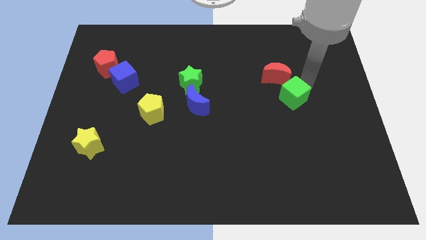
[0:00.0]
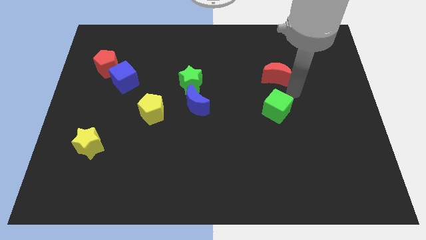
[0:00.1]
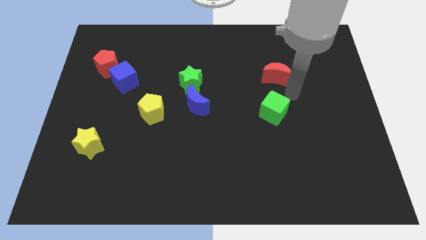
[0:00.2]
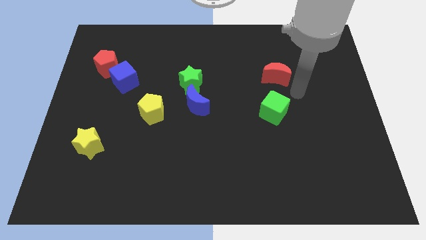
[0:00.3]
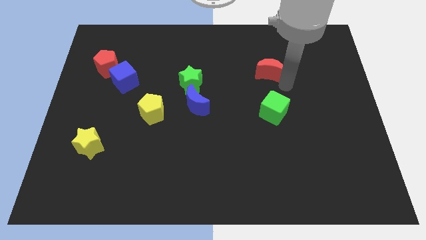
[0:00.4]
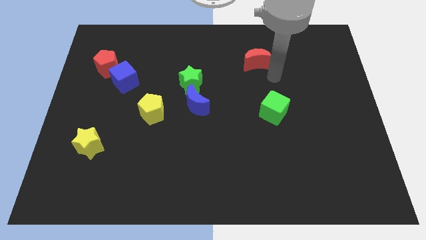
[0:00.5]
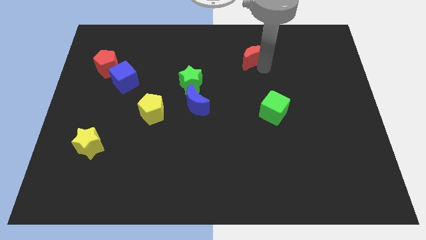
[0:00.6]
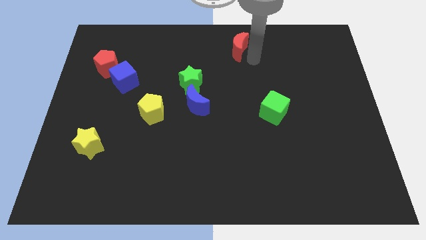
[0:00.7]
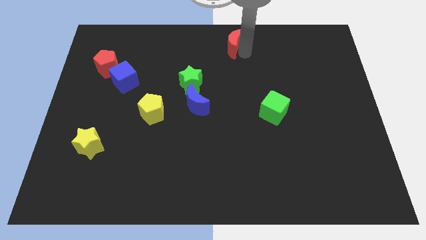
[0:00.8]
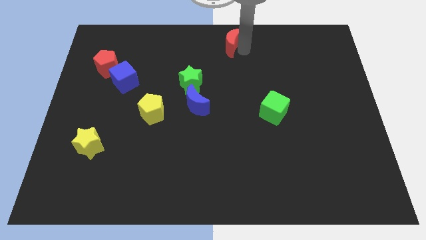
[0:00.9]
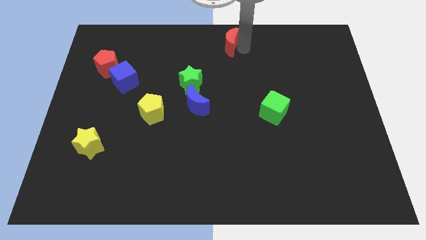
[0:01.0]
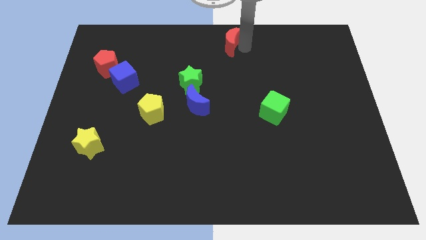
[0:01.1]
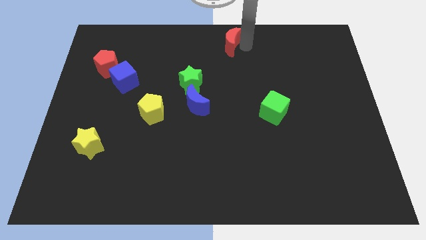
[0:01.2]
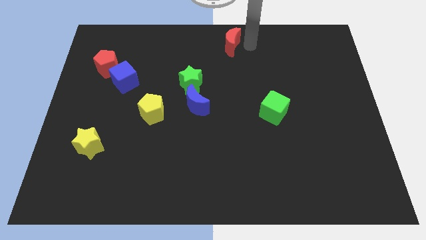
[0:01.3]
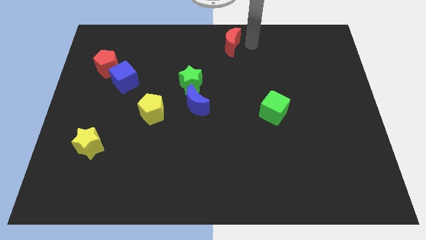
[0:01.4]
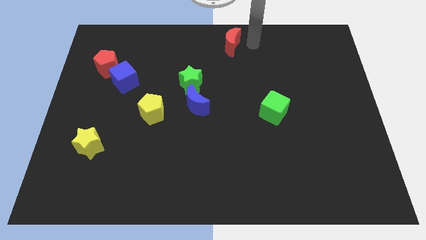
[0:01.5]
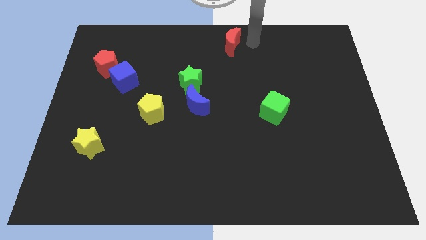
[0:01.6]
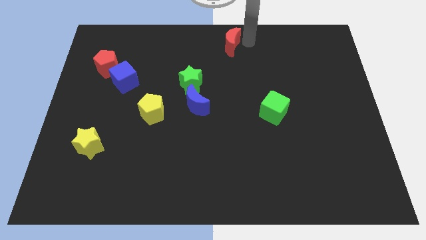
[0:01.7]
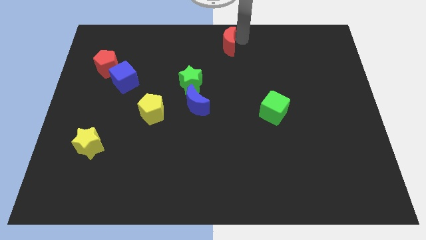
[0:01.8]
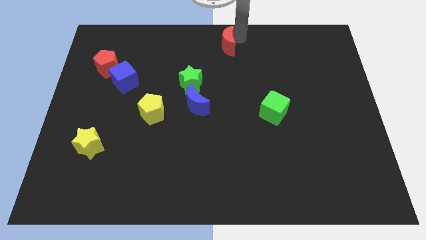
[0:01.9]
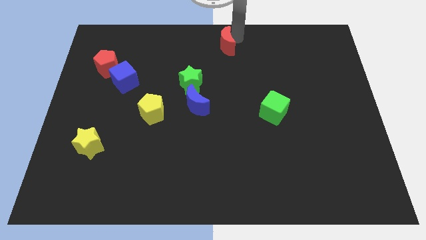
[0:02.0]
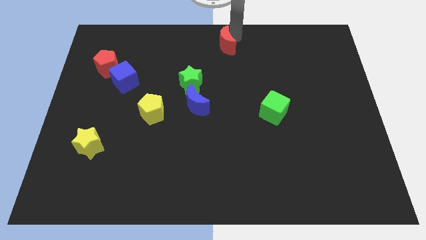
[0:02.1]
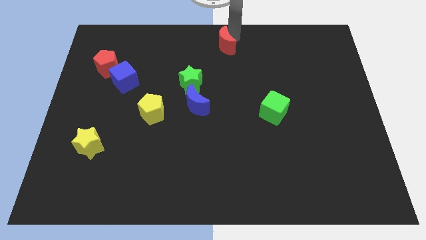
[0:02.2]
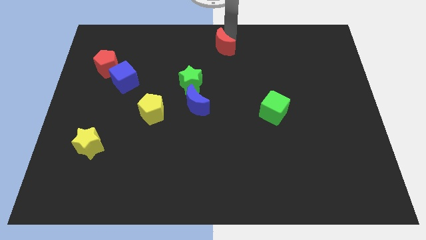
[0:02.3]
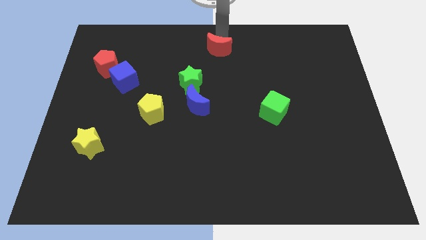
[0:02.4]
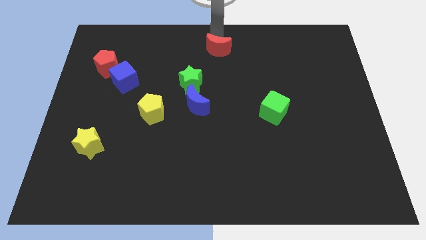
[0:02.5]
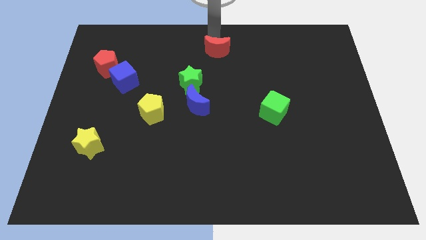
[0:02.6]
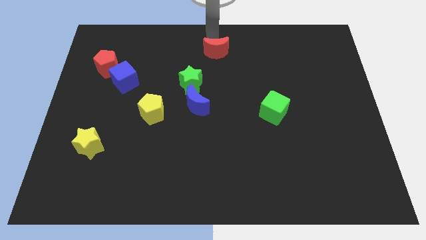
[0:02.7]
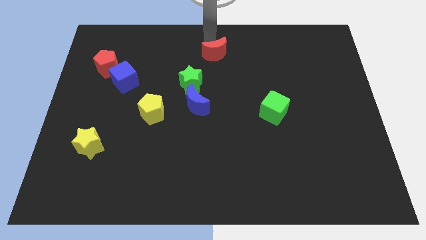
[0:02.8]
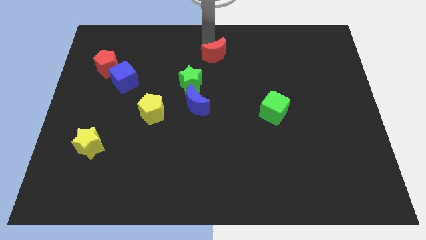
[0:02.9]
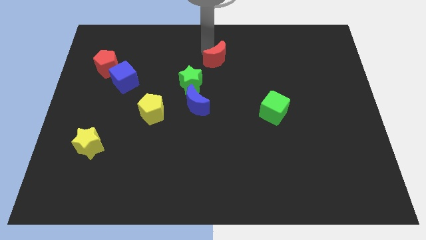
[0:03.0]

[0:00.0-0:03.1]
move the red moon to the center top

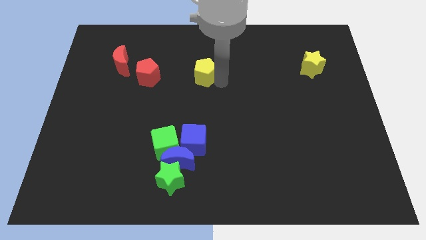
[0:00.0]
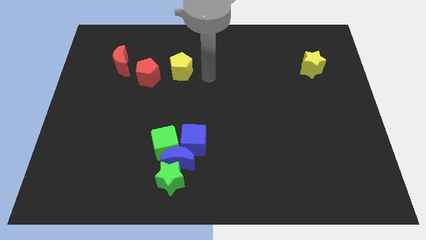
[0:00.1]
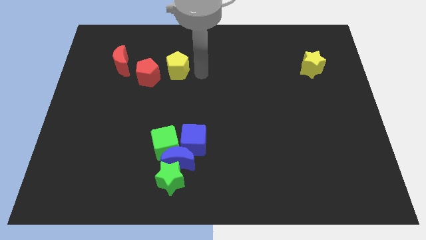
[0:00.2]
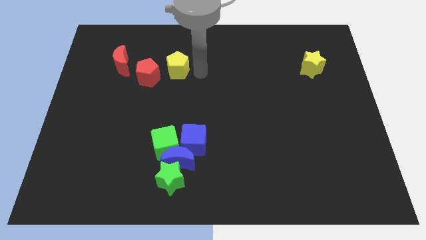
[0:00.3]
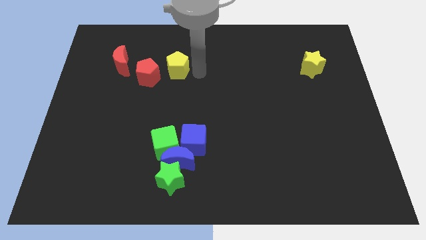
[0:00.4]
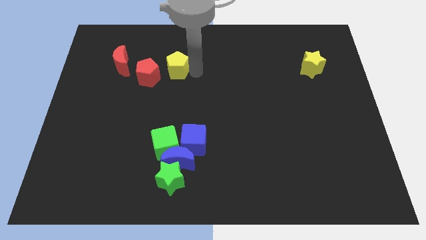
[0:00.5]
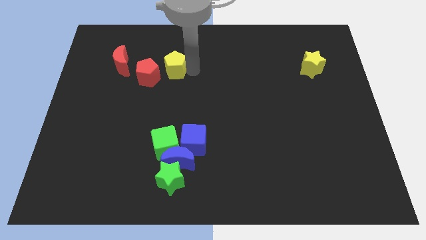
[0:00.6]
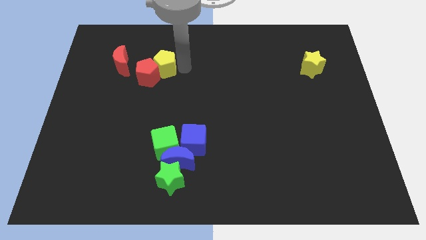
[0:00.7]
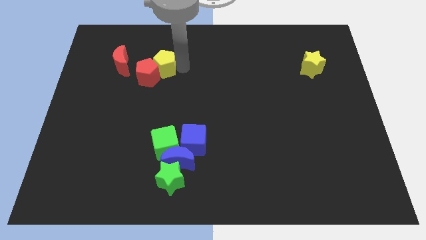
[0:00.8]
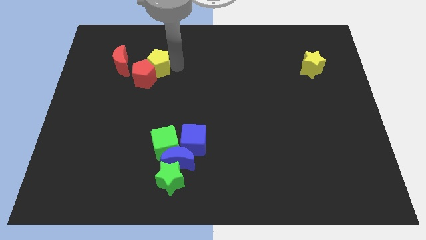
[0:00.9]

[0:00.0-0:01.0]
move yellow pentagon right above the red pentagon

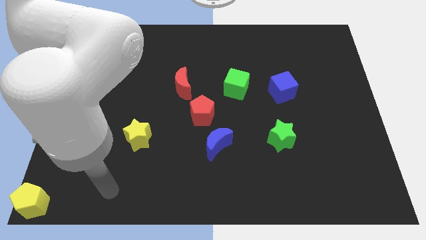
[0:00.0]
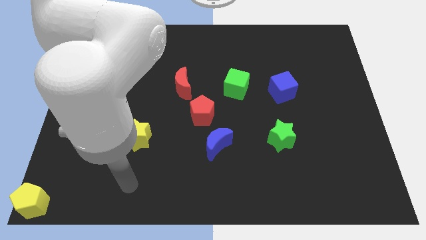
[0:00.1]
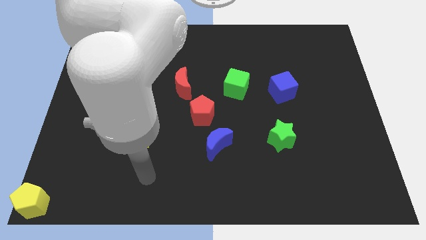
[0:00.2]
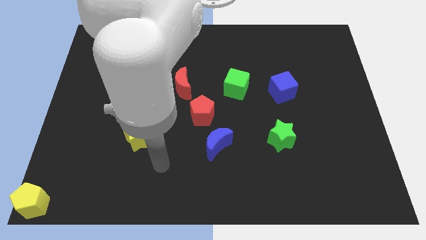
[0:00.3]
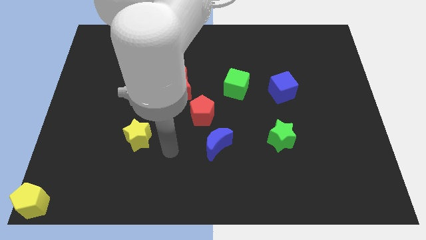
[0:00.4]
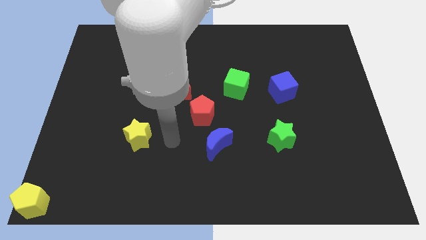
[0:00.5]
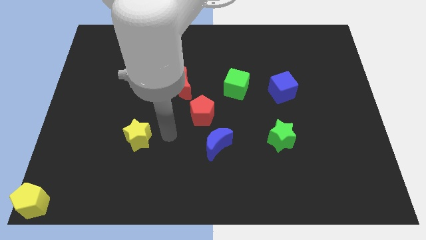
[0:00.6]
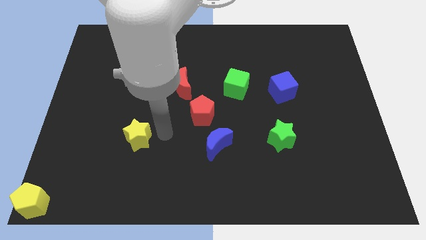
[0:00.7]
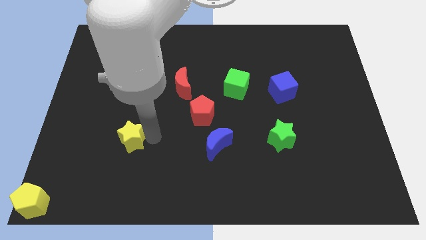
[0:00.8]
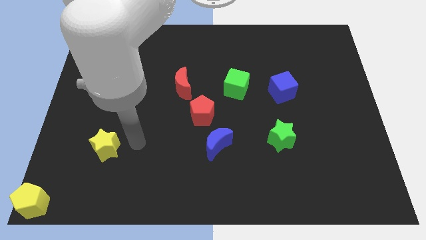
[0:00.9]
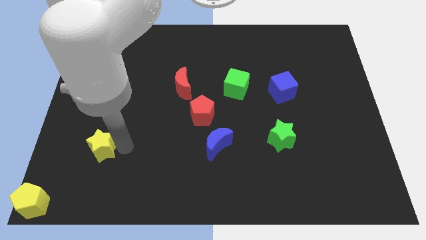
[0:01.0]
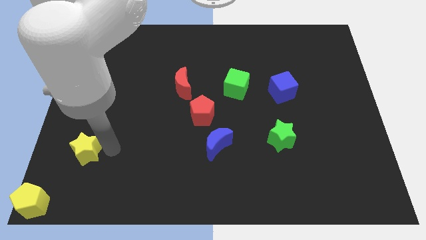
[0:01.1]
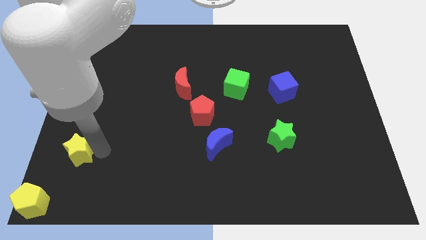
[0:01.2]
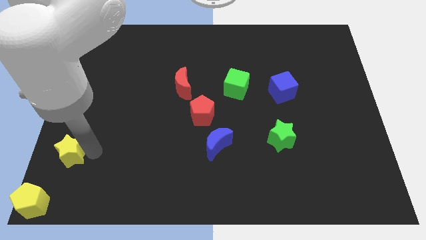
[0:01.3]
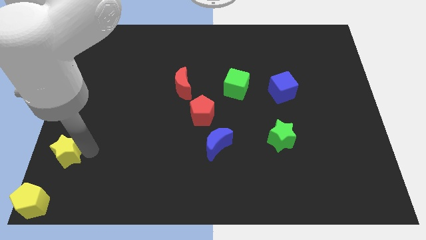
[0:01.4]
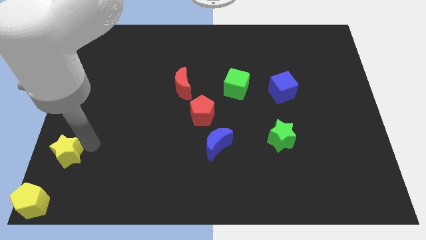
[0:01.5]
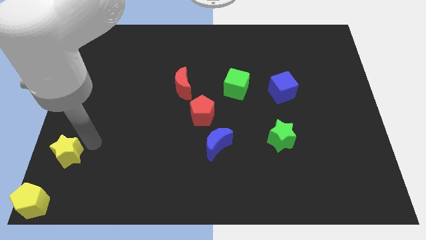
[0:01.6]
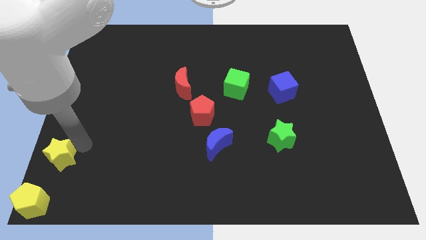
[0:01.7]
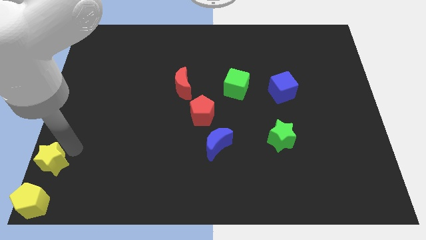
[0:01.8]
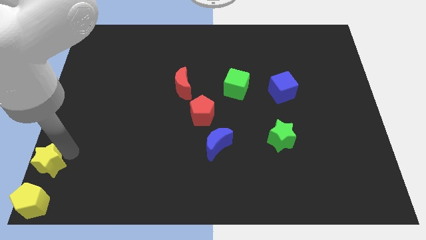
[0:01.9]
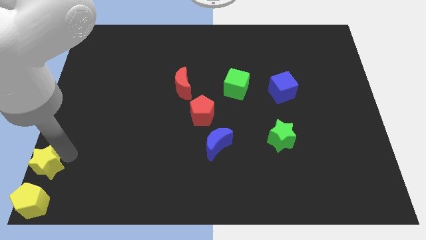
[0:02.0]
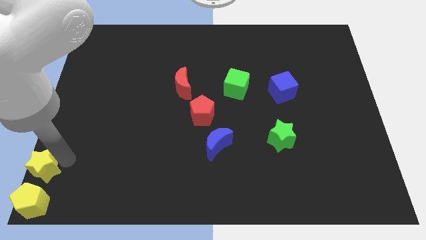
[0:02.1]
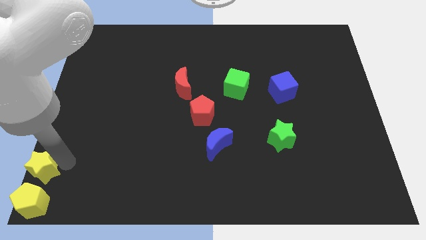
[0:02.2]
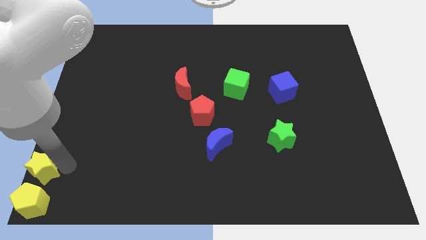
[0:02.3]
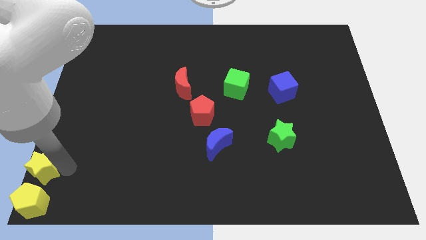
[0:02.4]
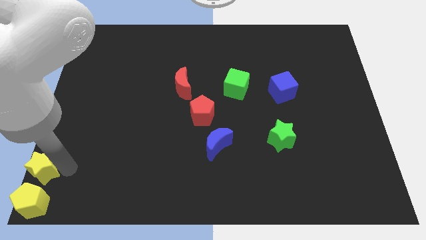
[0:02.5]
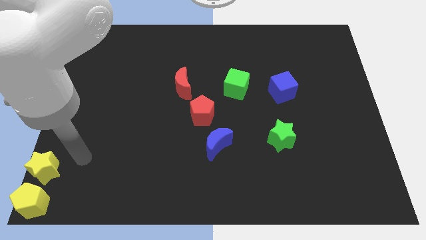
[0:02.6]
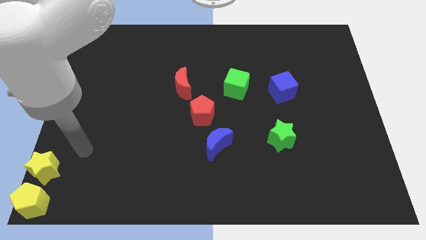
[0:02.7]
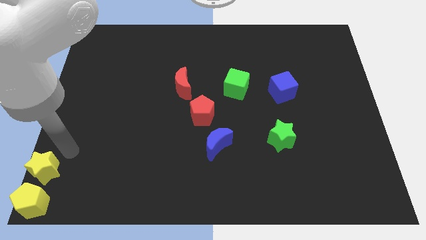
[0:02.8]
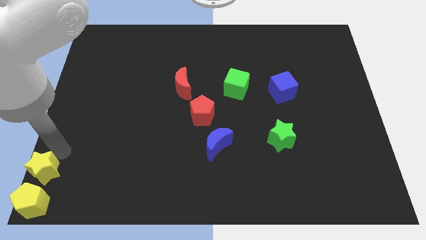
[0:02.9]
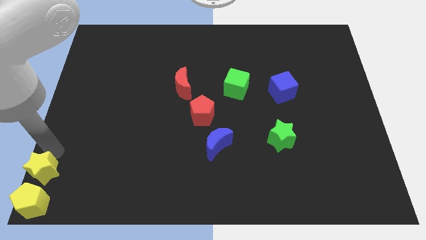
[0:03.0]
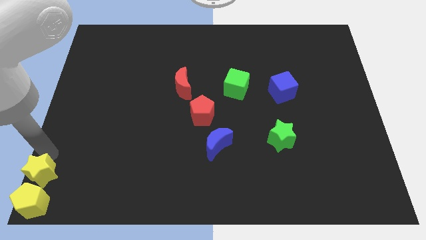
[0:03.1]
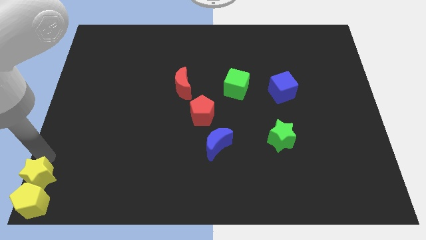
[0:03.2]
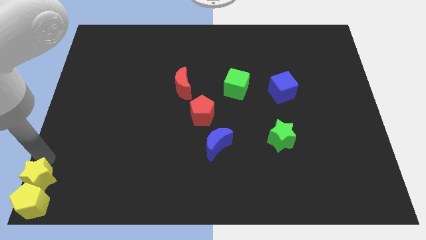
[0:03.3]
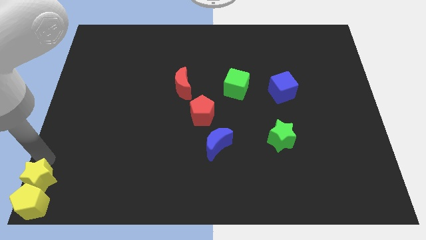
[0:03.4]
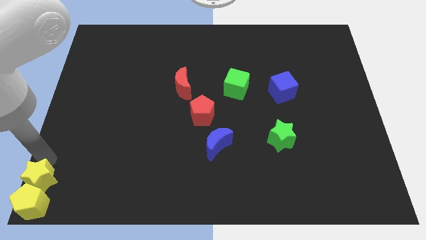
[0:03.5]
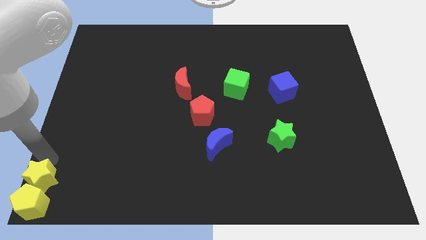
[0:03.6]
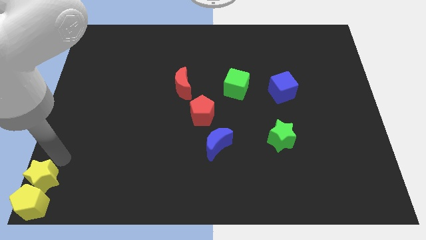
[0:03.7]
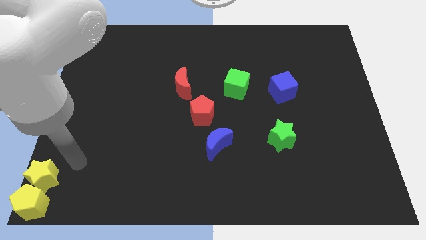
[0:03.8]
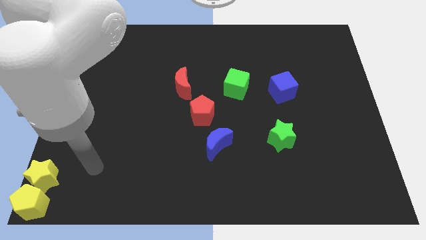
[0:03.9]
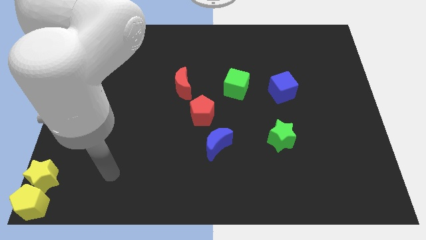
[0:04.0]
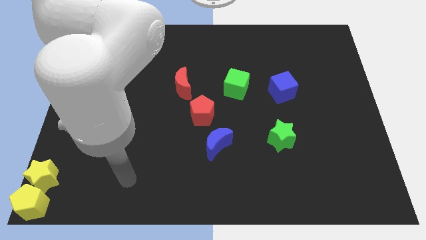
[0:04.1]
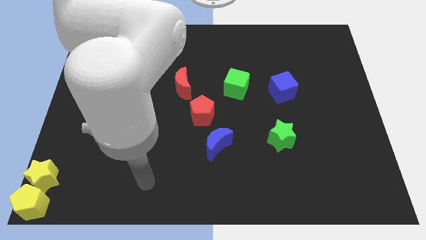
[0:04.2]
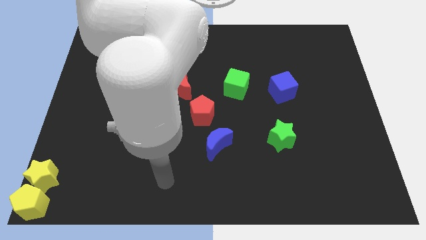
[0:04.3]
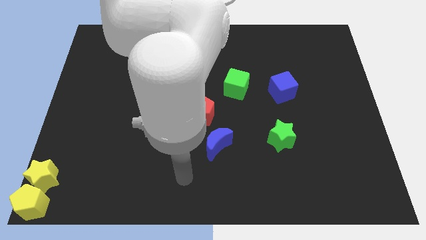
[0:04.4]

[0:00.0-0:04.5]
slide the yellow star above the yellow pentagon

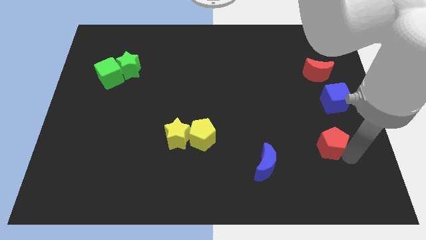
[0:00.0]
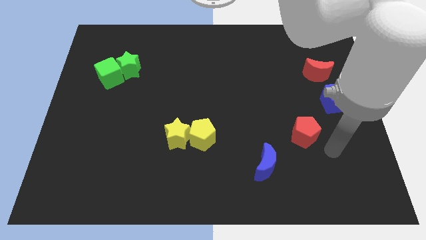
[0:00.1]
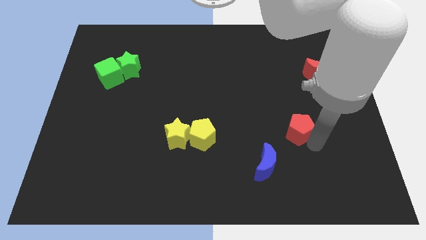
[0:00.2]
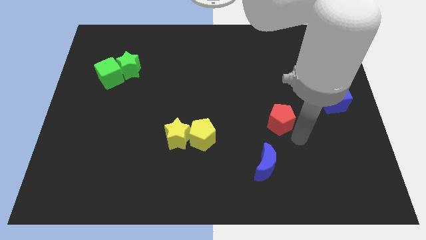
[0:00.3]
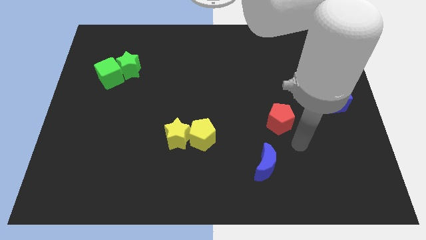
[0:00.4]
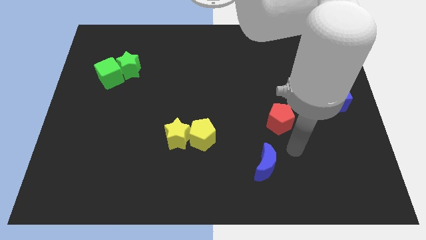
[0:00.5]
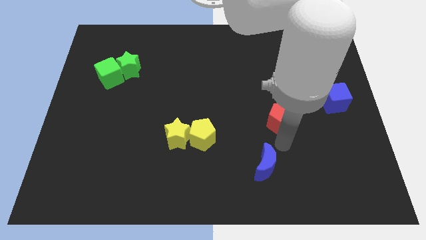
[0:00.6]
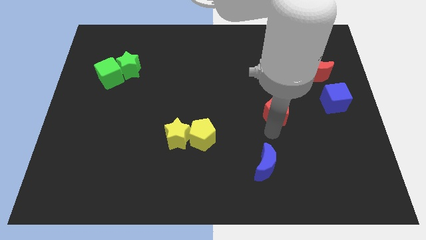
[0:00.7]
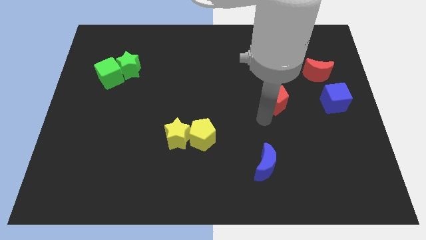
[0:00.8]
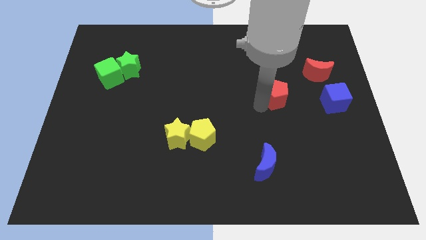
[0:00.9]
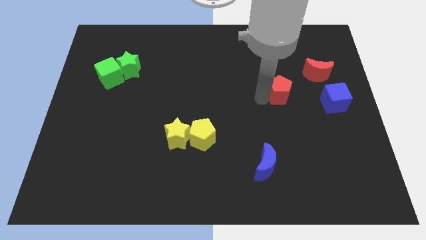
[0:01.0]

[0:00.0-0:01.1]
move the red pentagon diagonal to the left of the blue cube
